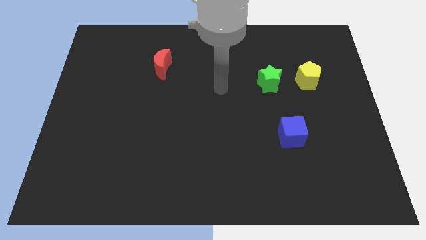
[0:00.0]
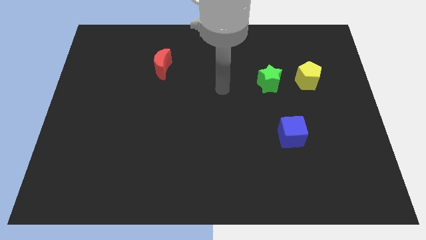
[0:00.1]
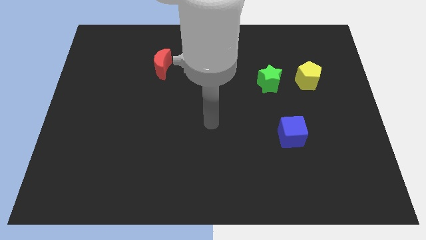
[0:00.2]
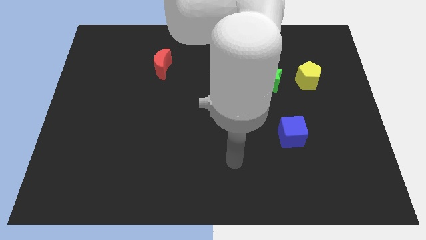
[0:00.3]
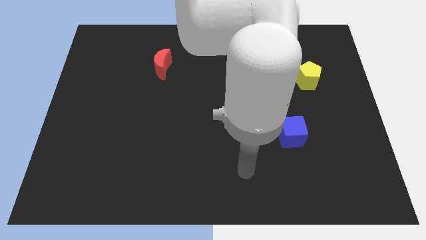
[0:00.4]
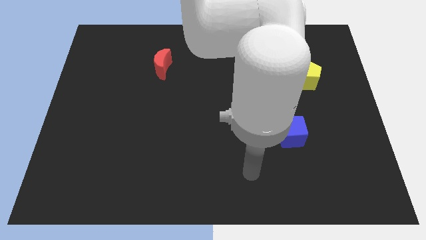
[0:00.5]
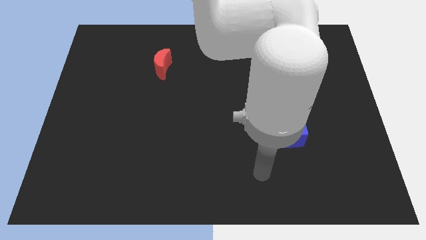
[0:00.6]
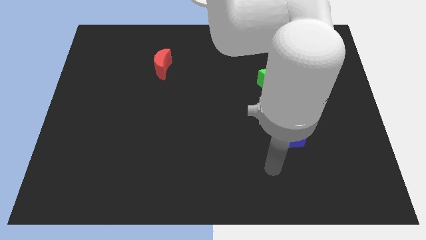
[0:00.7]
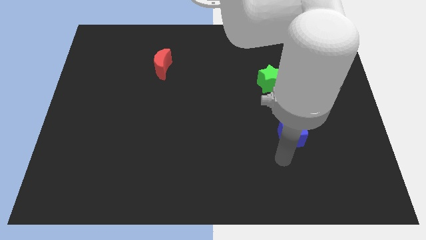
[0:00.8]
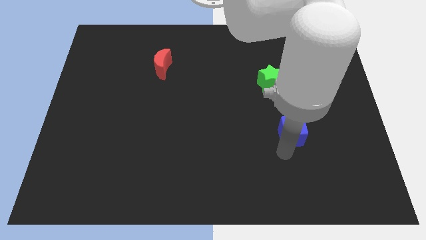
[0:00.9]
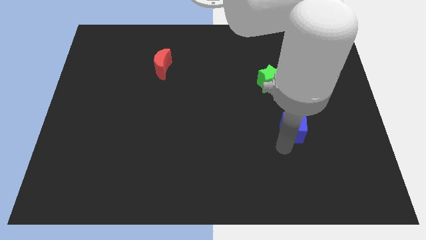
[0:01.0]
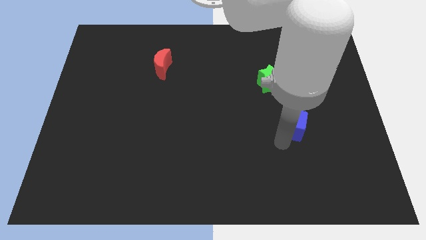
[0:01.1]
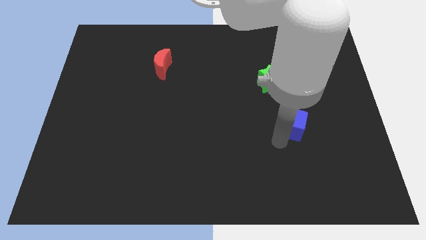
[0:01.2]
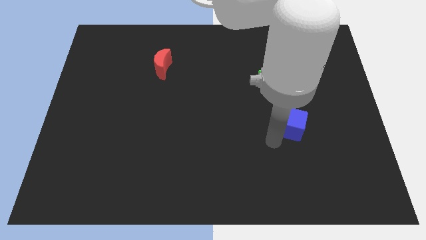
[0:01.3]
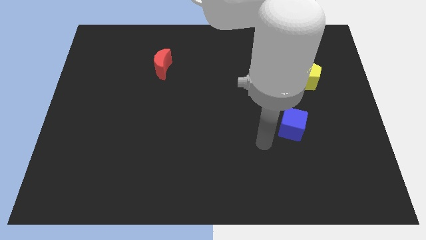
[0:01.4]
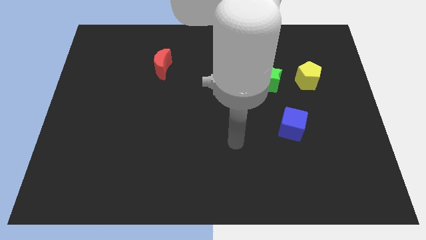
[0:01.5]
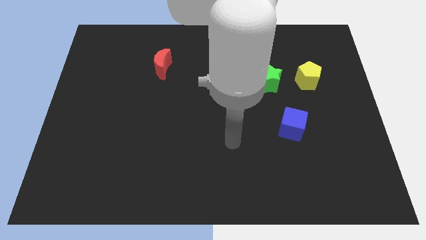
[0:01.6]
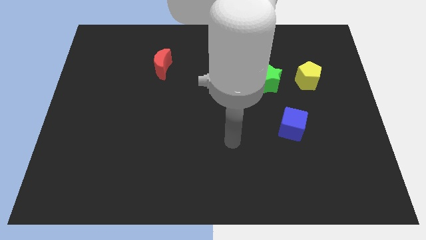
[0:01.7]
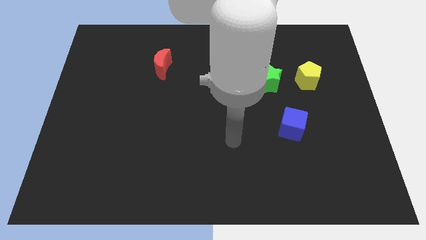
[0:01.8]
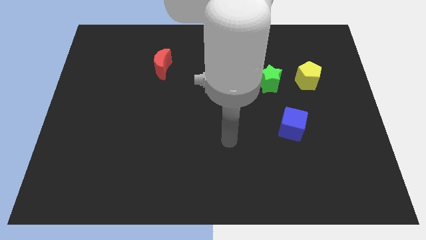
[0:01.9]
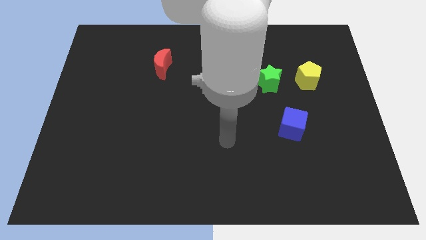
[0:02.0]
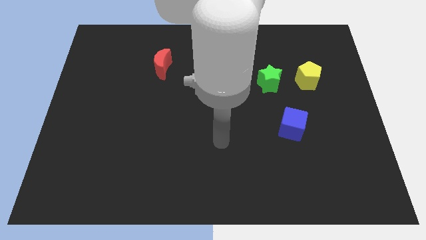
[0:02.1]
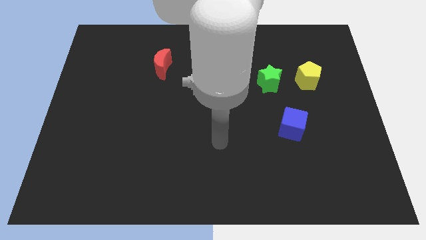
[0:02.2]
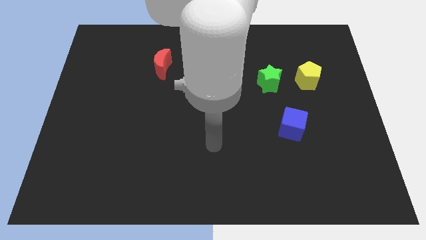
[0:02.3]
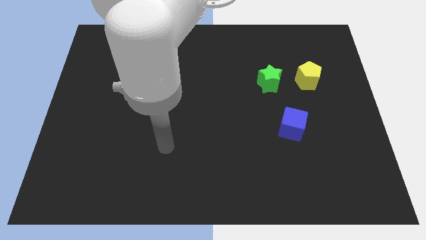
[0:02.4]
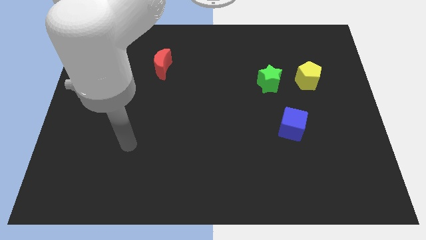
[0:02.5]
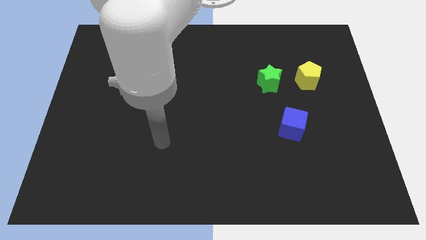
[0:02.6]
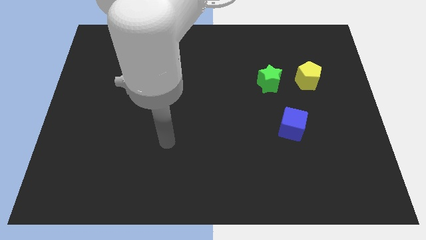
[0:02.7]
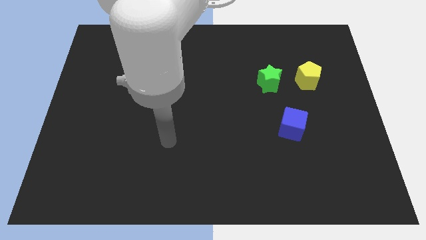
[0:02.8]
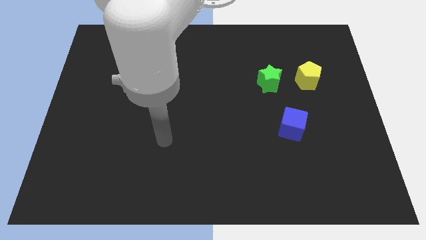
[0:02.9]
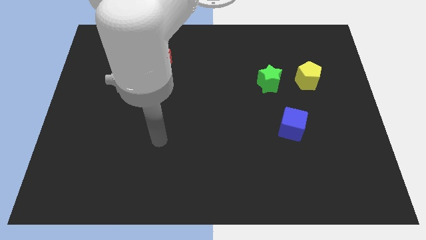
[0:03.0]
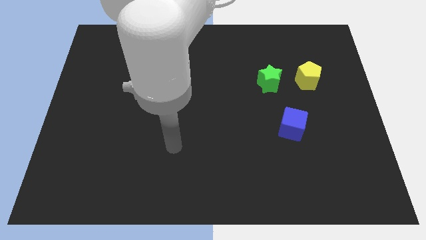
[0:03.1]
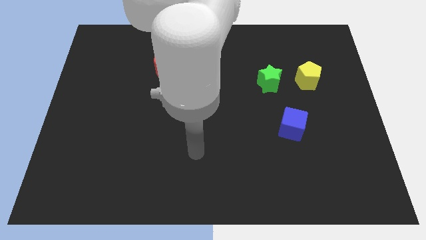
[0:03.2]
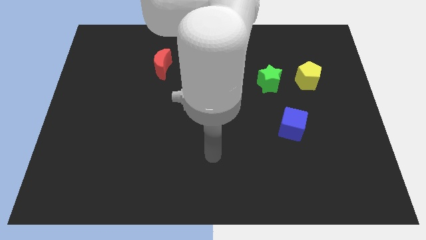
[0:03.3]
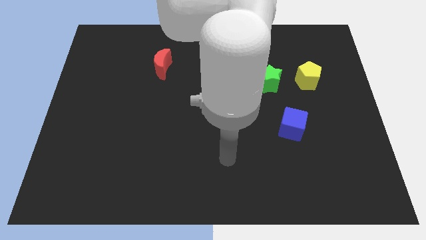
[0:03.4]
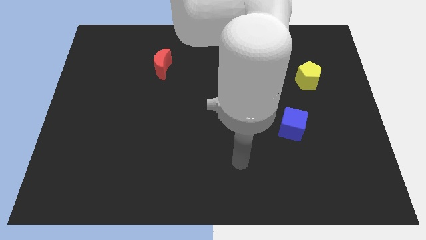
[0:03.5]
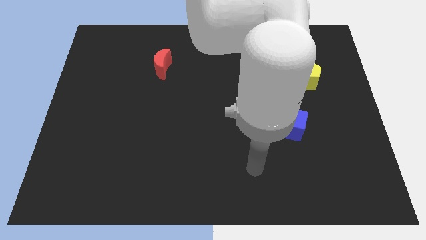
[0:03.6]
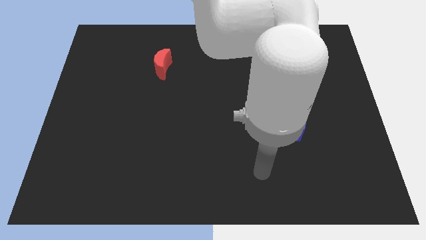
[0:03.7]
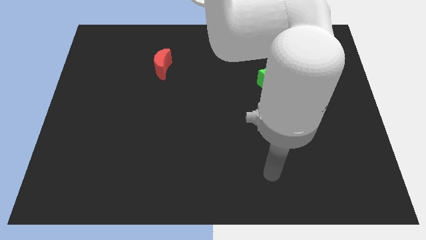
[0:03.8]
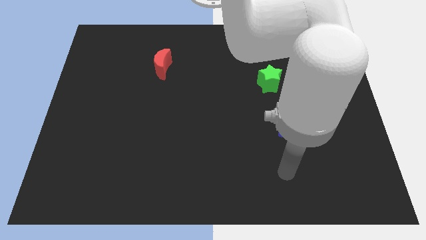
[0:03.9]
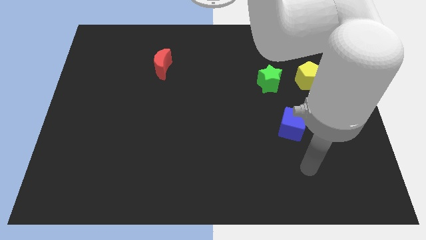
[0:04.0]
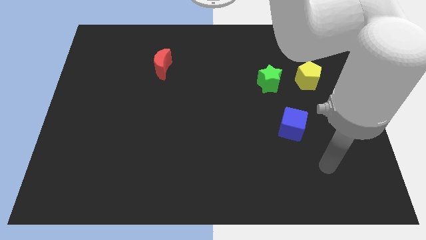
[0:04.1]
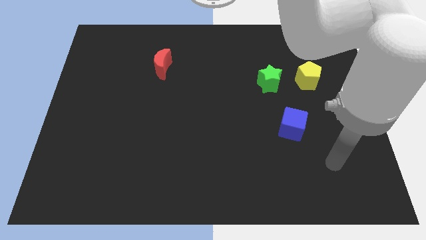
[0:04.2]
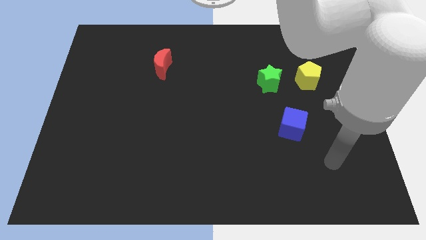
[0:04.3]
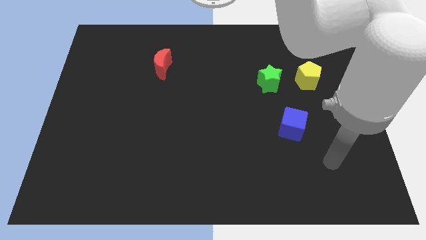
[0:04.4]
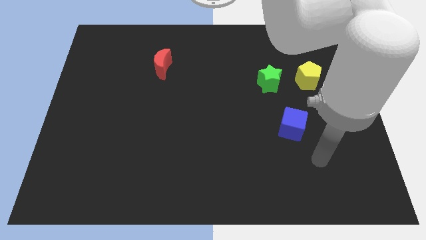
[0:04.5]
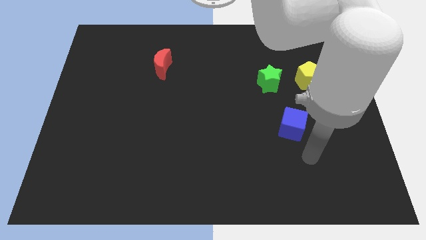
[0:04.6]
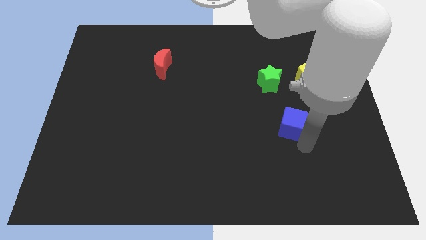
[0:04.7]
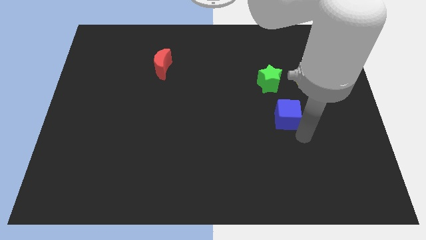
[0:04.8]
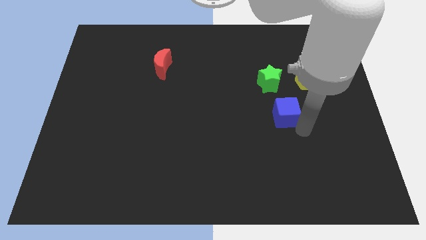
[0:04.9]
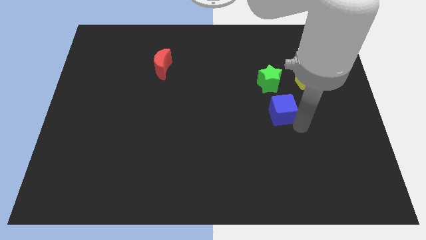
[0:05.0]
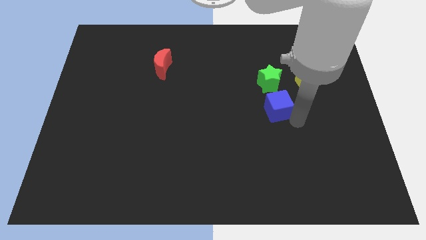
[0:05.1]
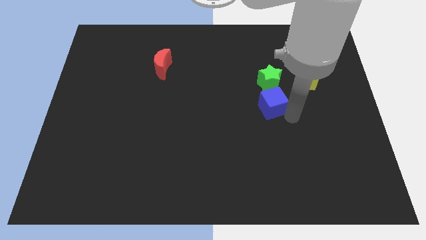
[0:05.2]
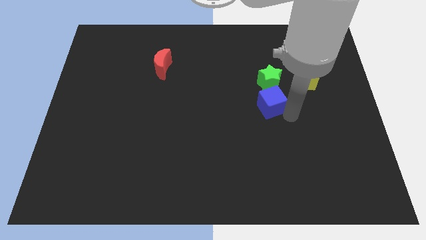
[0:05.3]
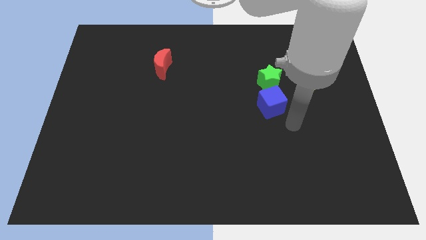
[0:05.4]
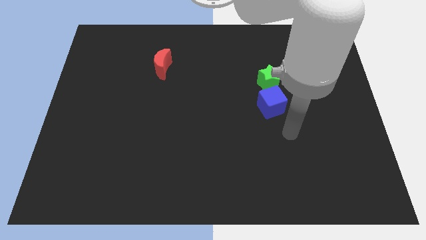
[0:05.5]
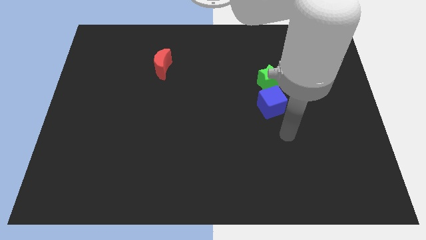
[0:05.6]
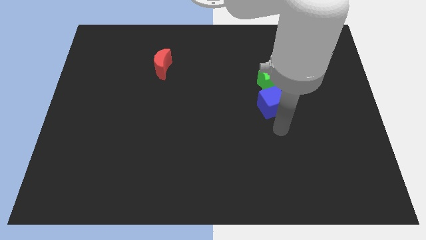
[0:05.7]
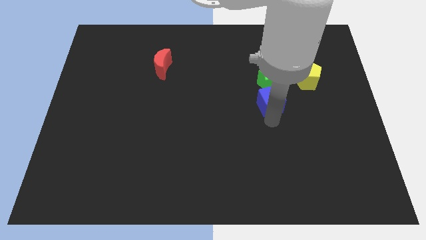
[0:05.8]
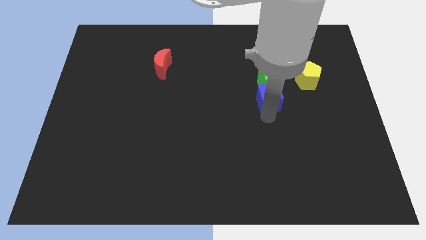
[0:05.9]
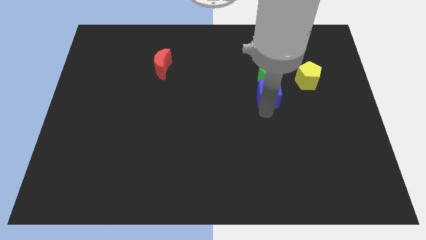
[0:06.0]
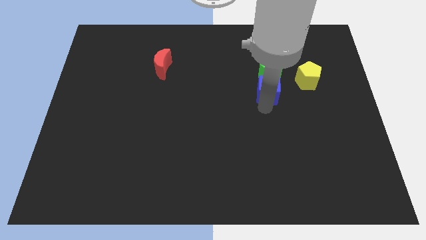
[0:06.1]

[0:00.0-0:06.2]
put the blue cube to the green block

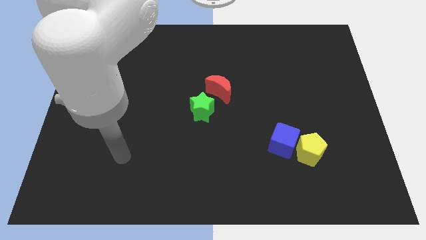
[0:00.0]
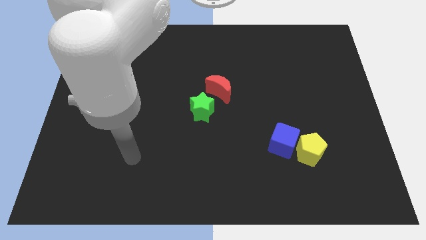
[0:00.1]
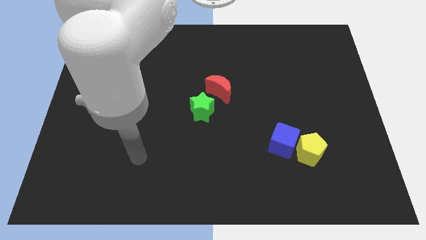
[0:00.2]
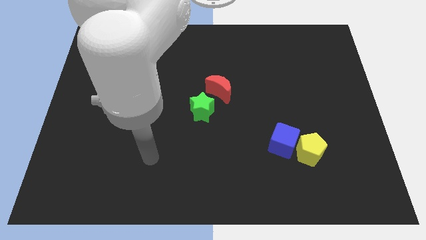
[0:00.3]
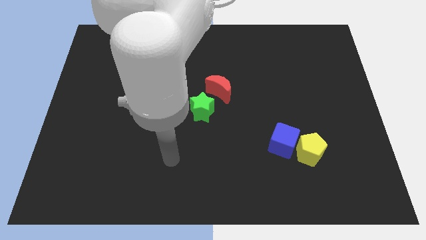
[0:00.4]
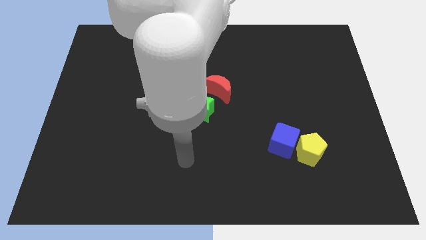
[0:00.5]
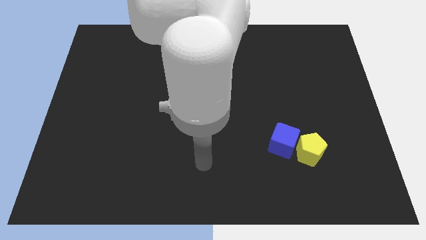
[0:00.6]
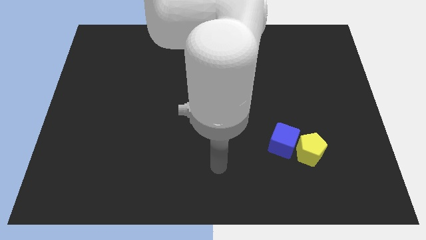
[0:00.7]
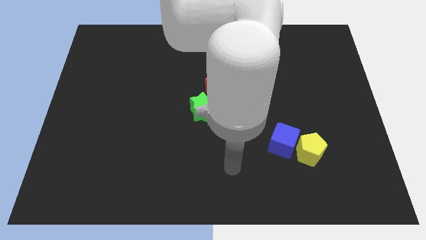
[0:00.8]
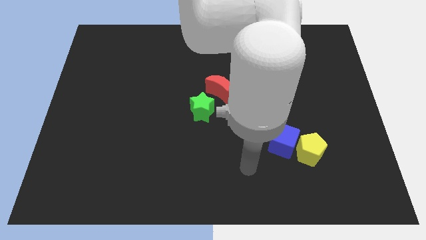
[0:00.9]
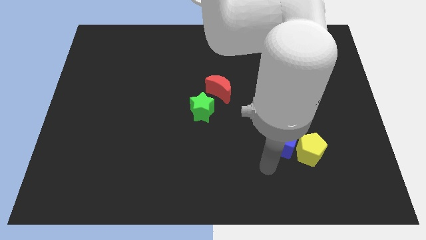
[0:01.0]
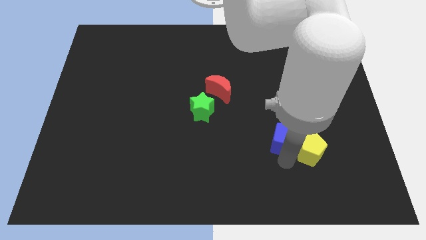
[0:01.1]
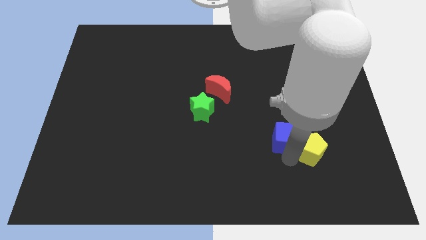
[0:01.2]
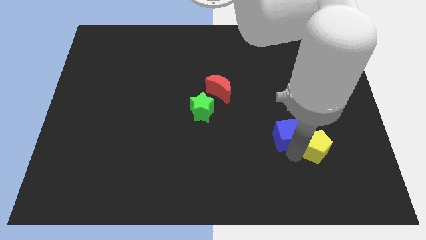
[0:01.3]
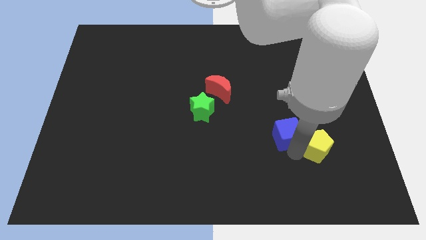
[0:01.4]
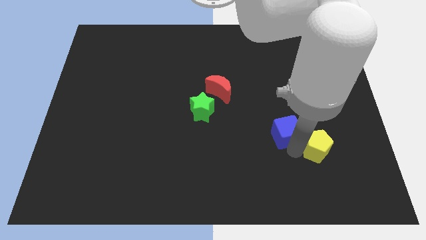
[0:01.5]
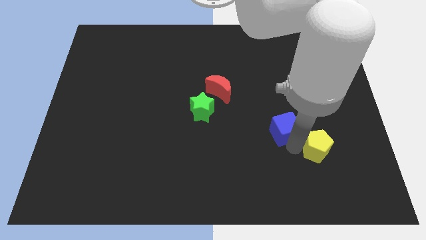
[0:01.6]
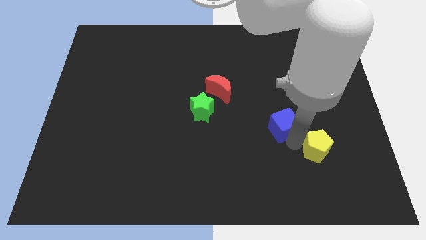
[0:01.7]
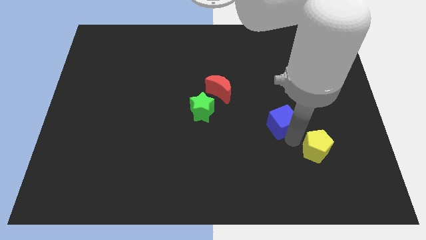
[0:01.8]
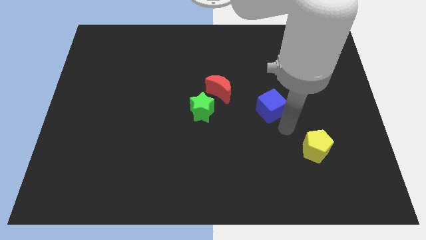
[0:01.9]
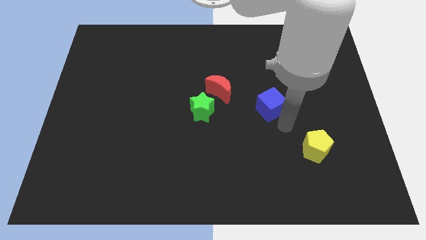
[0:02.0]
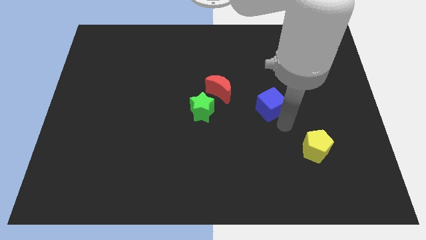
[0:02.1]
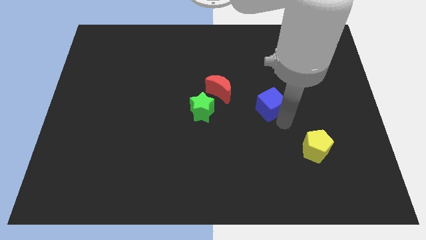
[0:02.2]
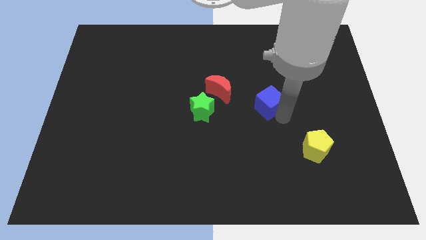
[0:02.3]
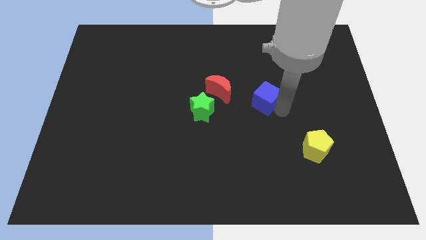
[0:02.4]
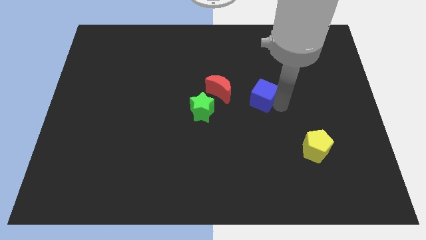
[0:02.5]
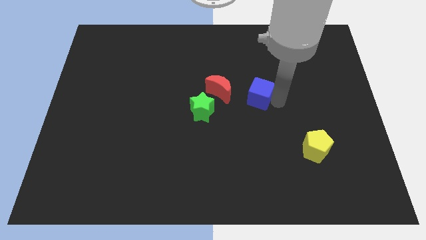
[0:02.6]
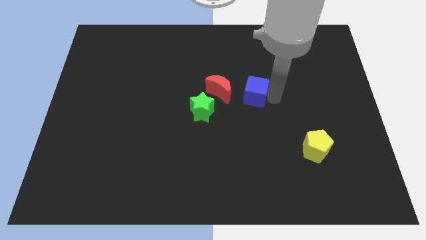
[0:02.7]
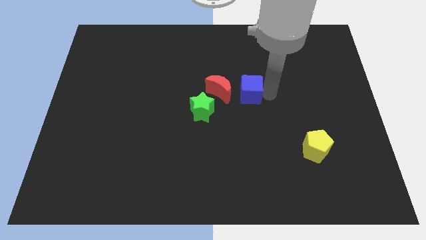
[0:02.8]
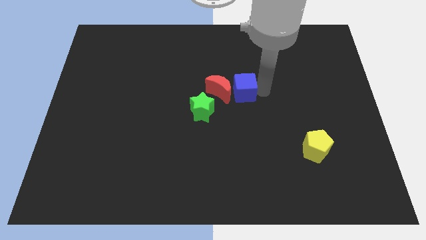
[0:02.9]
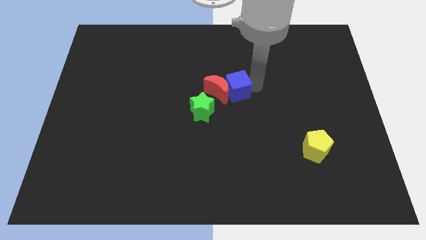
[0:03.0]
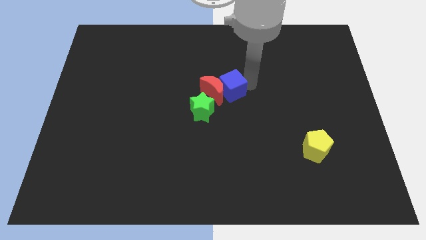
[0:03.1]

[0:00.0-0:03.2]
push the blue cube close to the red moon
